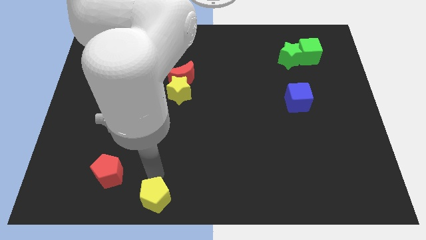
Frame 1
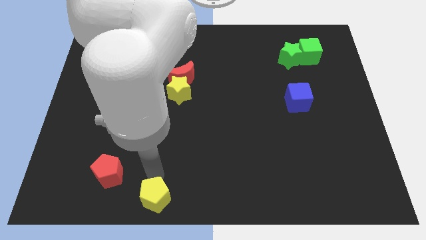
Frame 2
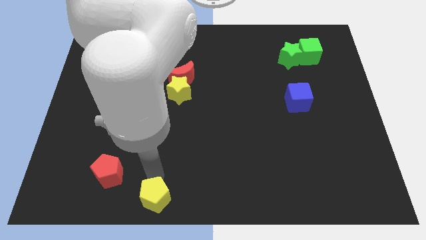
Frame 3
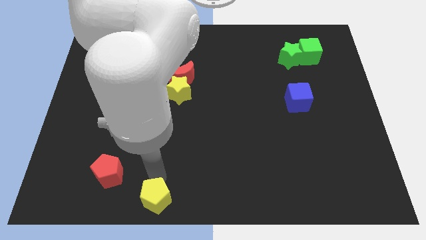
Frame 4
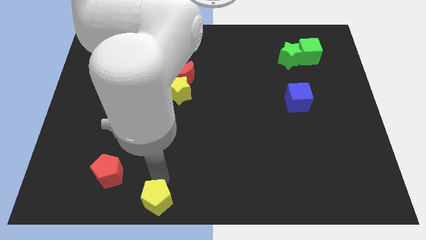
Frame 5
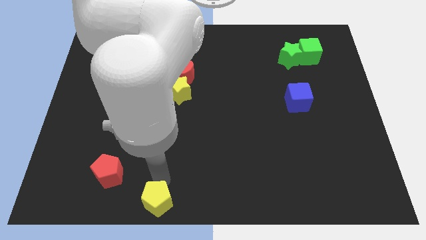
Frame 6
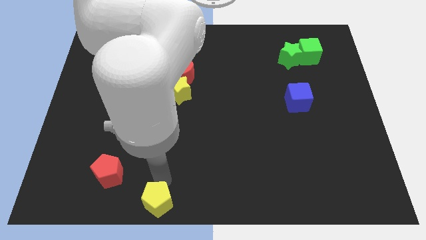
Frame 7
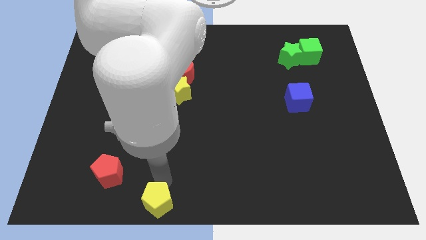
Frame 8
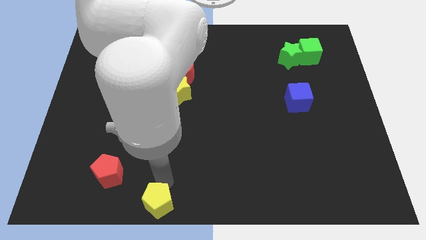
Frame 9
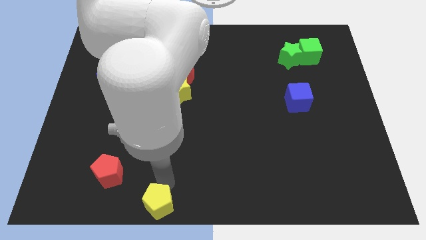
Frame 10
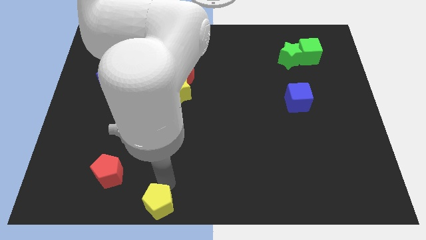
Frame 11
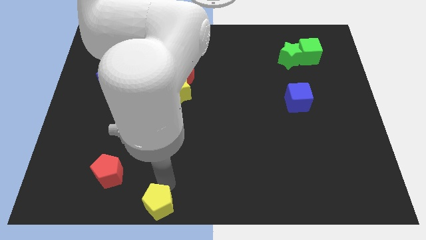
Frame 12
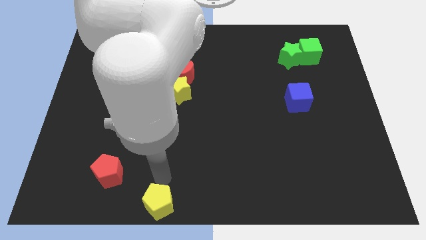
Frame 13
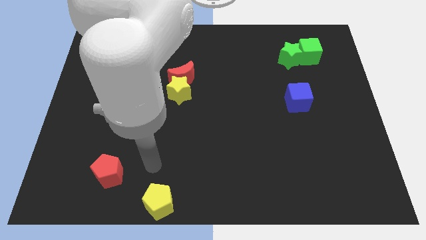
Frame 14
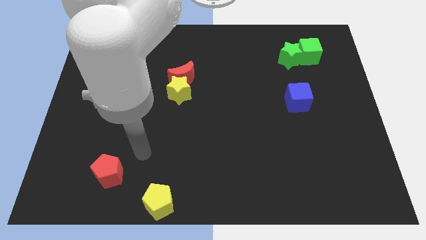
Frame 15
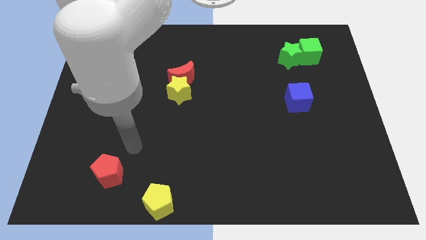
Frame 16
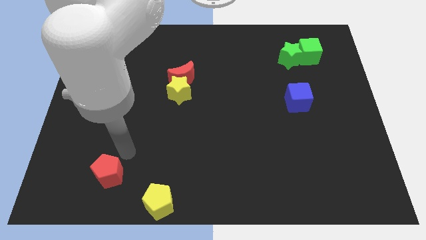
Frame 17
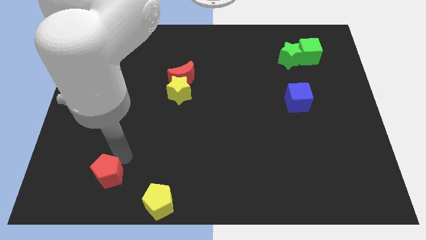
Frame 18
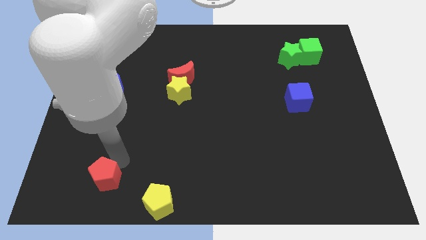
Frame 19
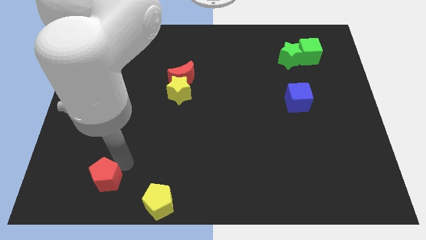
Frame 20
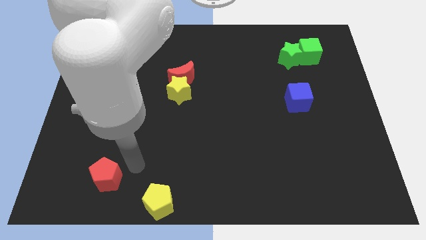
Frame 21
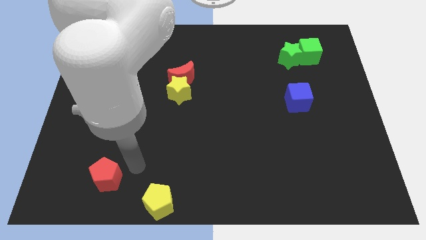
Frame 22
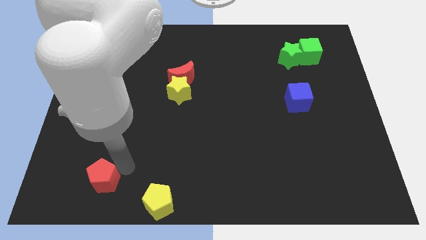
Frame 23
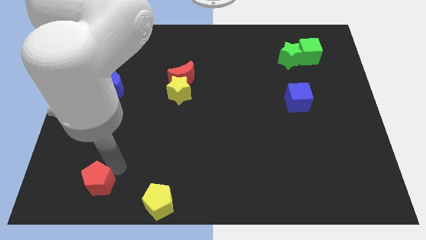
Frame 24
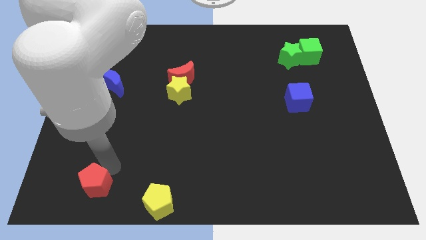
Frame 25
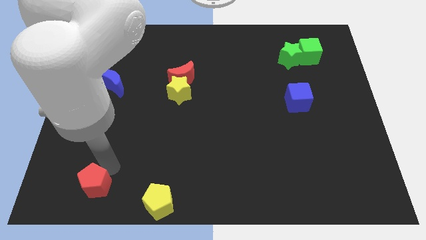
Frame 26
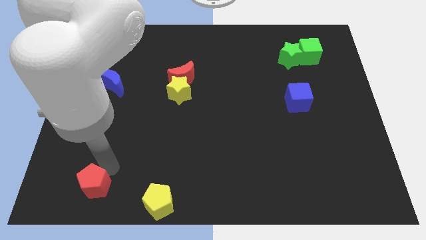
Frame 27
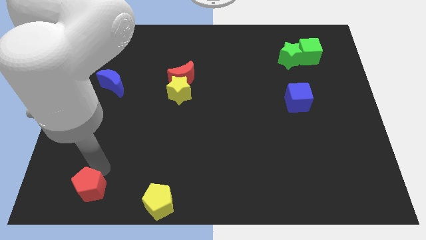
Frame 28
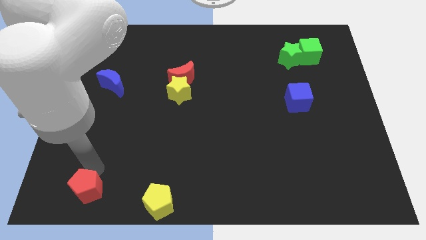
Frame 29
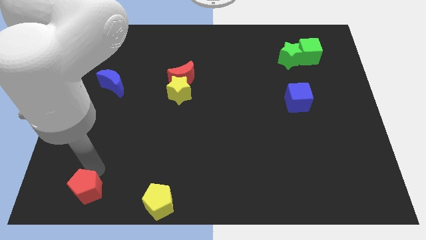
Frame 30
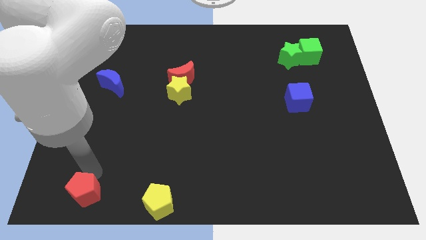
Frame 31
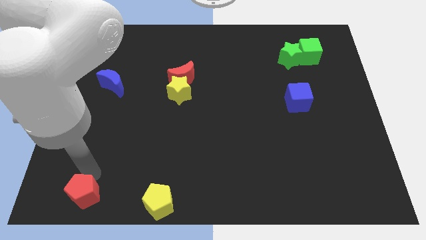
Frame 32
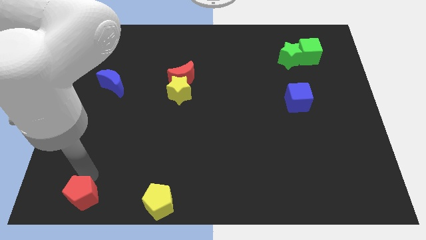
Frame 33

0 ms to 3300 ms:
push the yellow pentagon and the red pentagon slightly downward

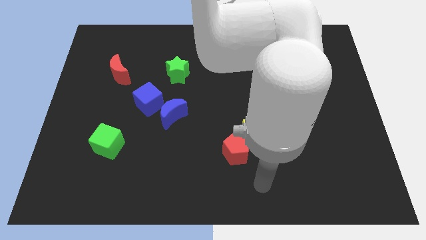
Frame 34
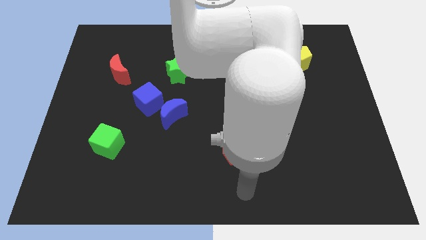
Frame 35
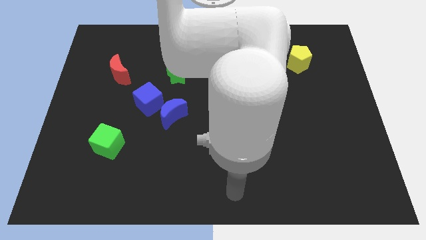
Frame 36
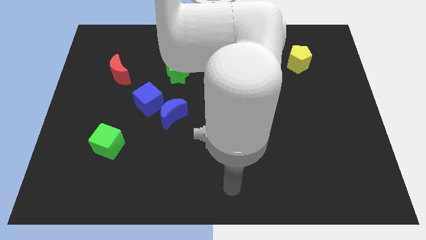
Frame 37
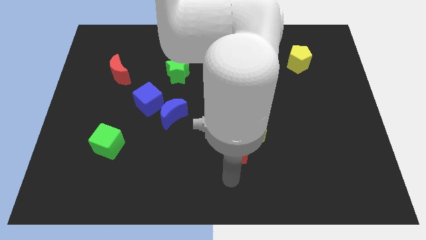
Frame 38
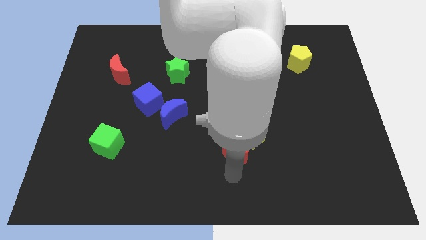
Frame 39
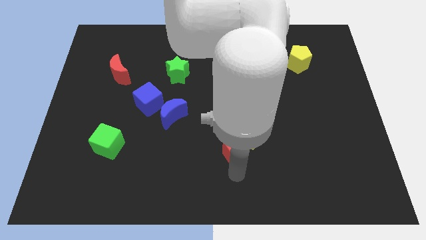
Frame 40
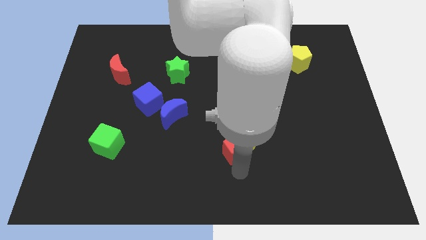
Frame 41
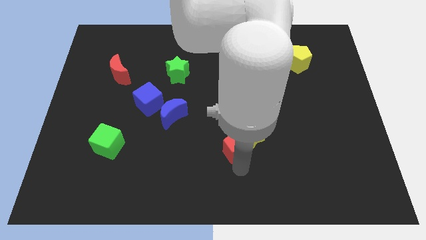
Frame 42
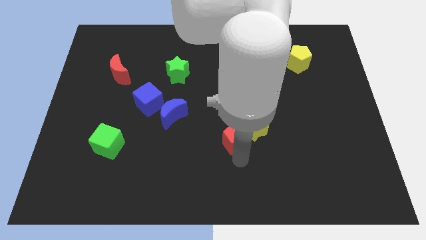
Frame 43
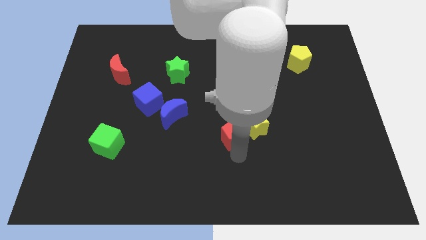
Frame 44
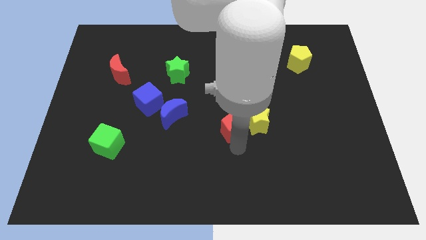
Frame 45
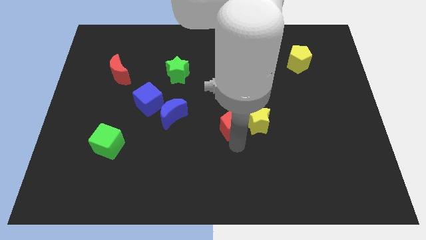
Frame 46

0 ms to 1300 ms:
push red pentagon upwards

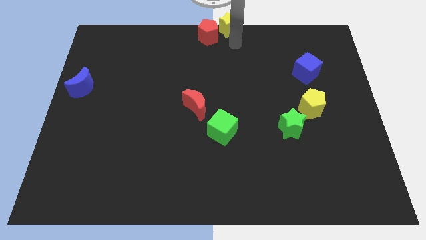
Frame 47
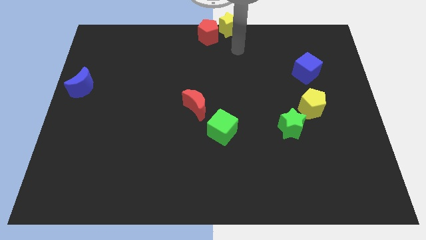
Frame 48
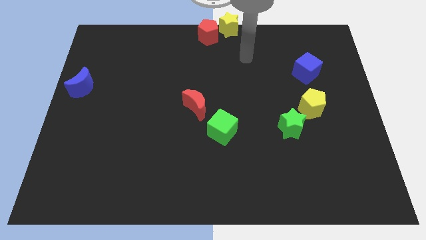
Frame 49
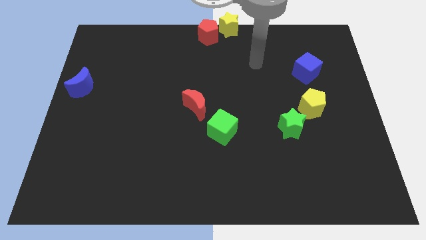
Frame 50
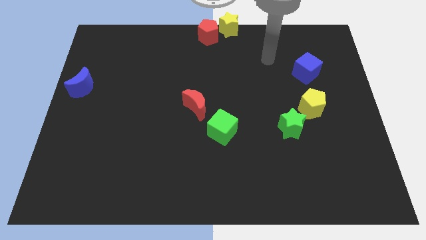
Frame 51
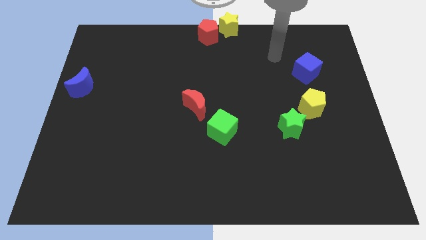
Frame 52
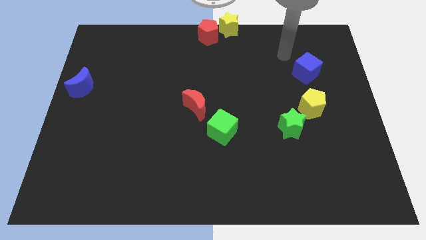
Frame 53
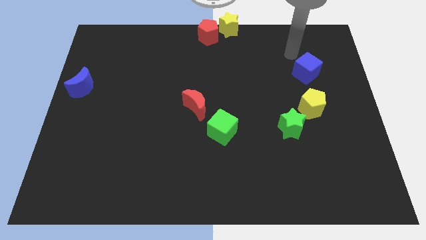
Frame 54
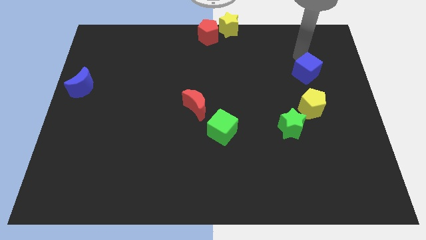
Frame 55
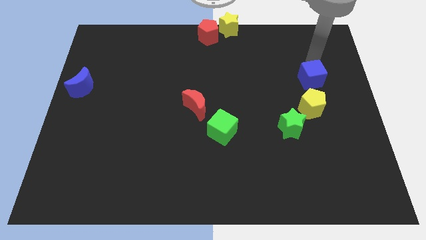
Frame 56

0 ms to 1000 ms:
point your arm at the top of blue cube

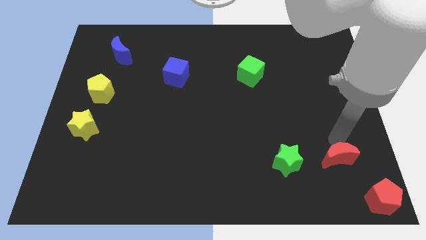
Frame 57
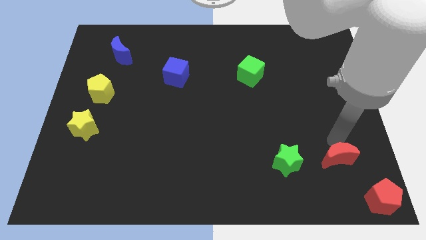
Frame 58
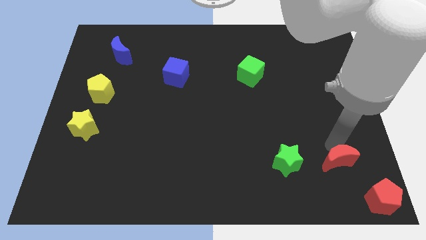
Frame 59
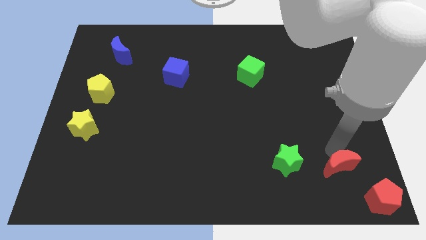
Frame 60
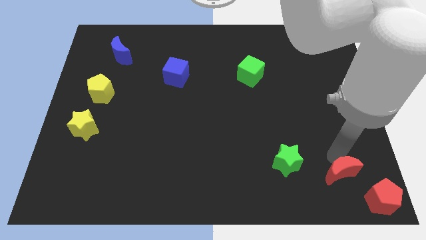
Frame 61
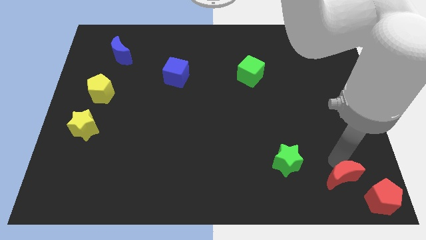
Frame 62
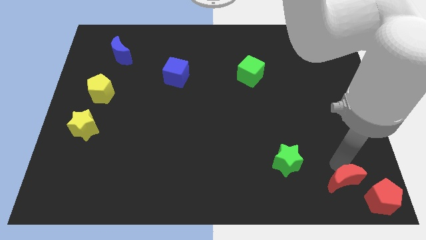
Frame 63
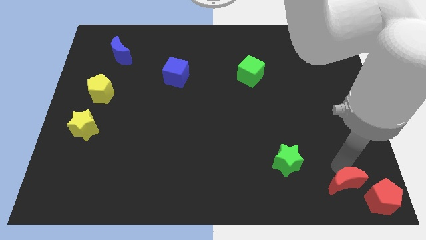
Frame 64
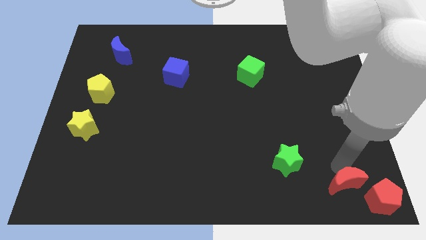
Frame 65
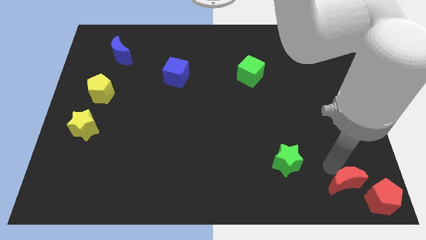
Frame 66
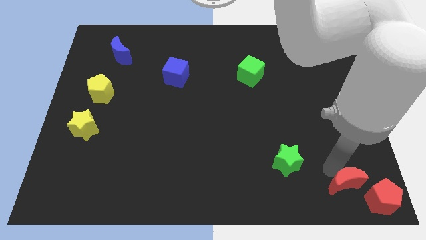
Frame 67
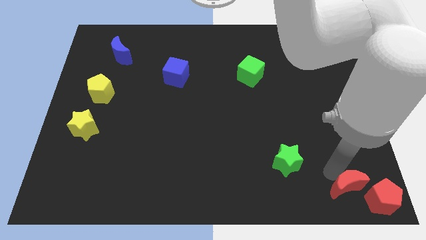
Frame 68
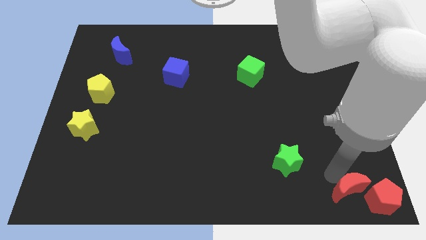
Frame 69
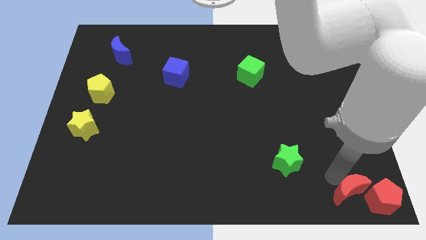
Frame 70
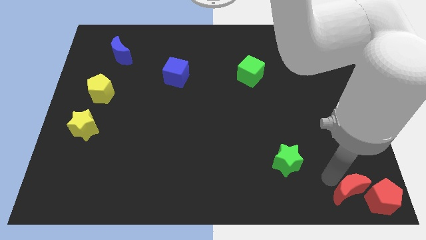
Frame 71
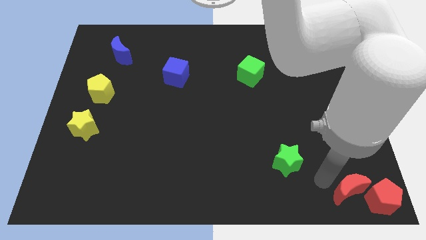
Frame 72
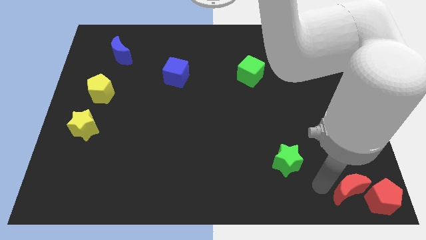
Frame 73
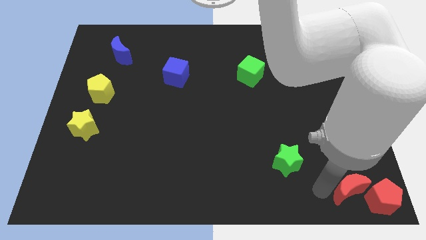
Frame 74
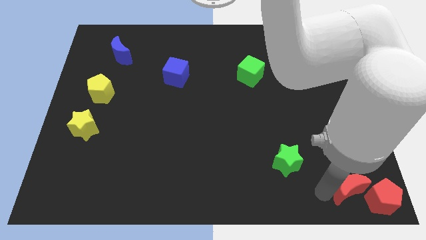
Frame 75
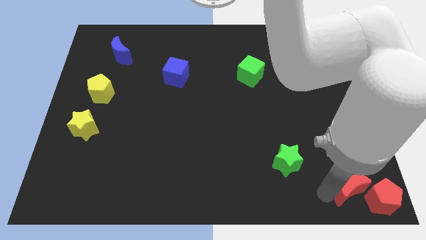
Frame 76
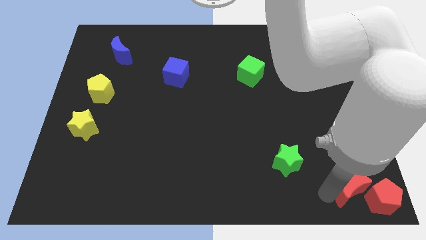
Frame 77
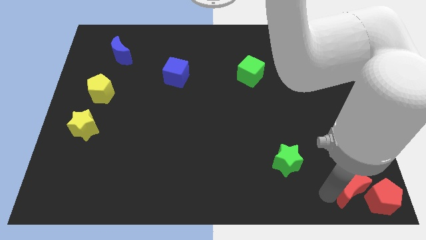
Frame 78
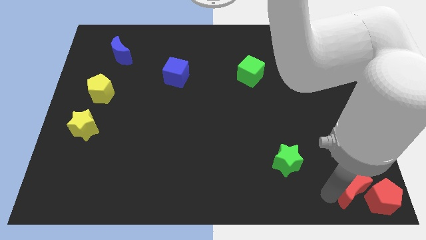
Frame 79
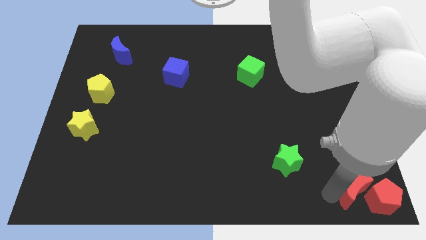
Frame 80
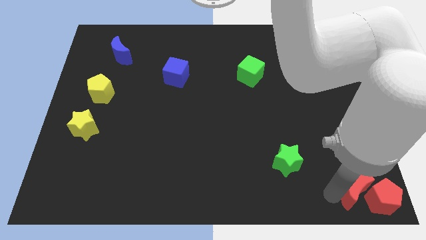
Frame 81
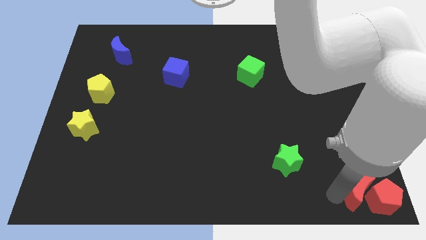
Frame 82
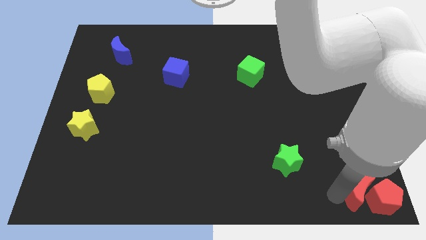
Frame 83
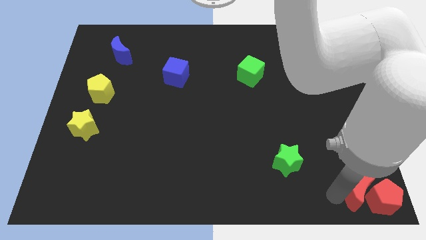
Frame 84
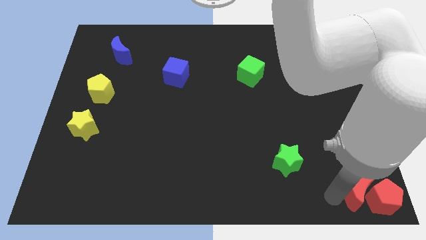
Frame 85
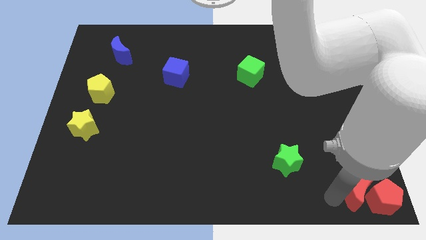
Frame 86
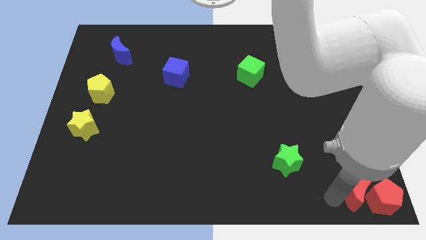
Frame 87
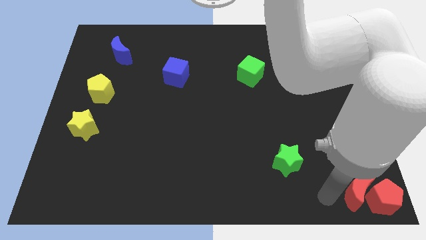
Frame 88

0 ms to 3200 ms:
push the red crescent to the left side of the red pentagon
